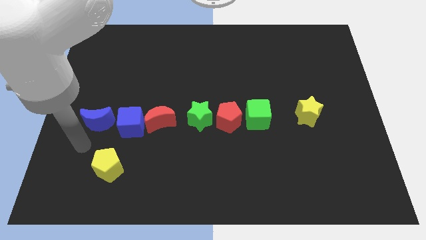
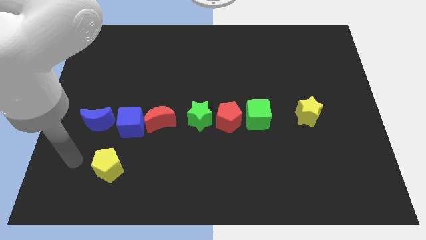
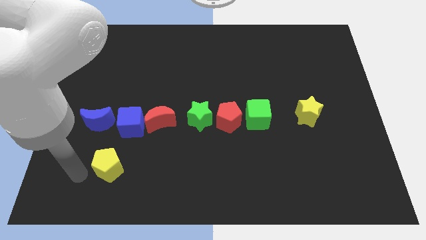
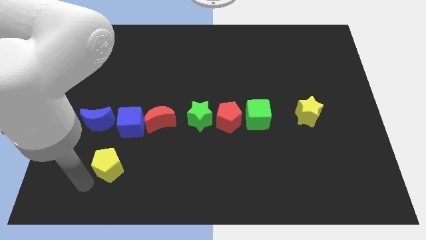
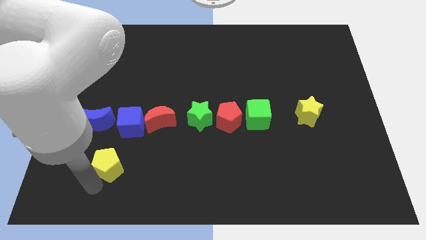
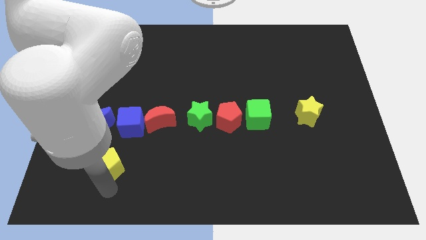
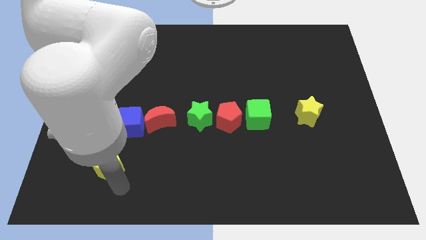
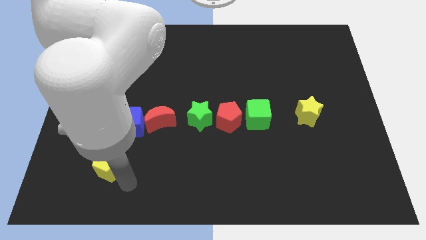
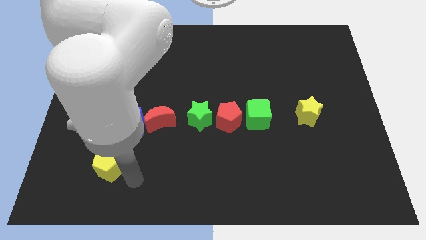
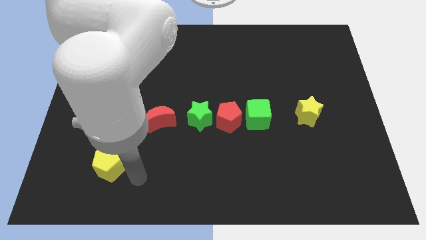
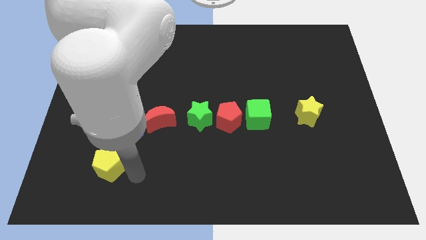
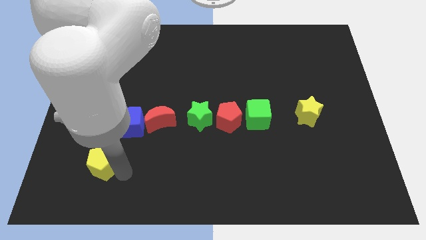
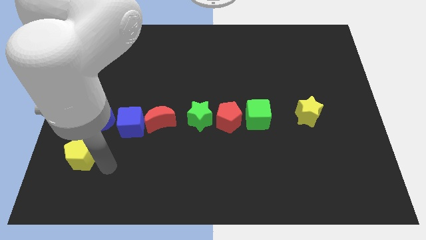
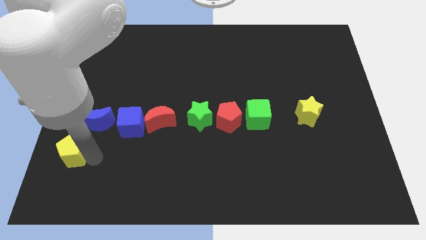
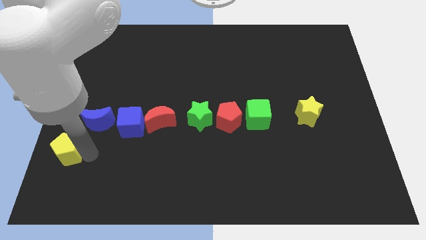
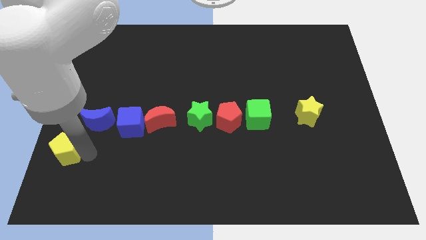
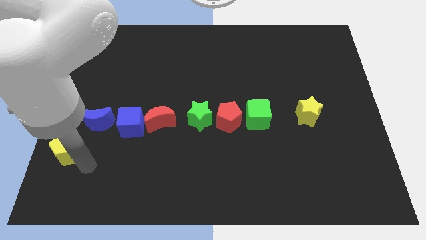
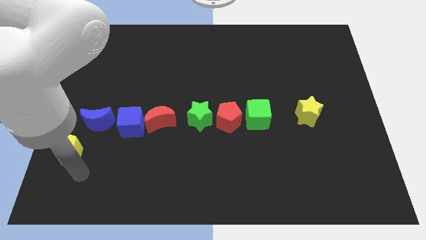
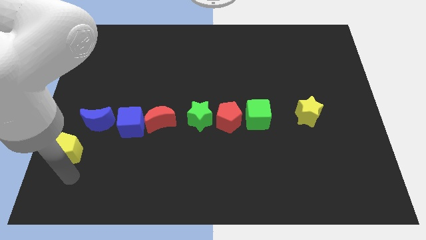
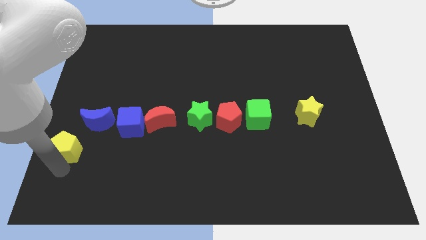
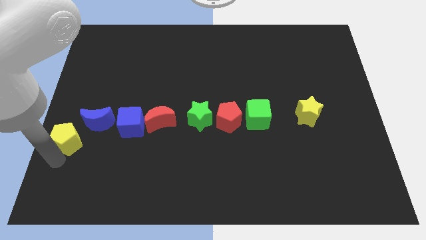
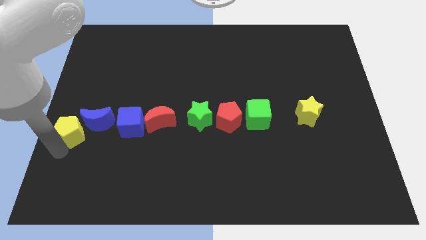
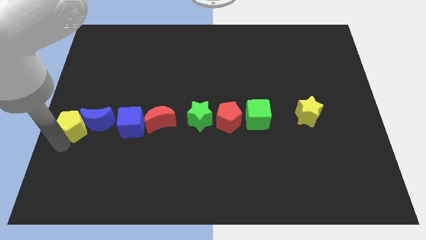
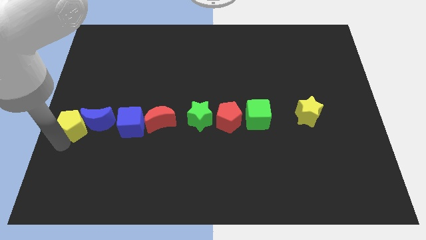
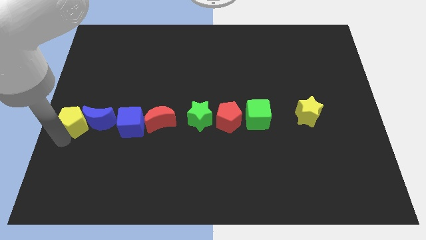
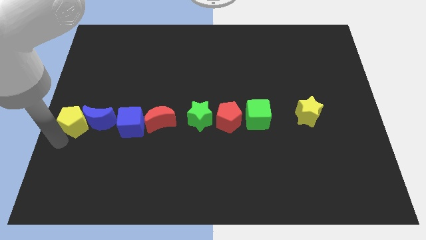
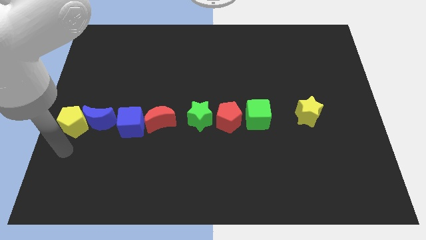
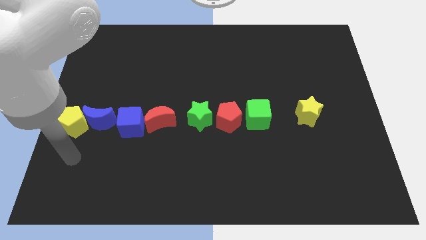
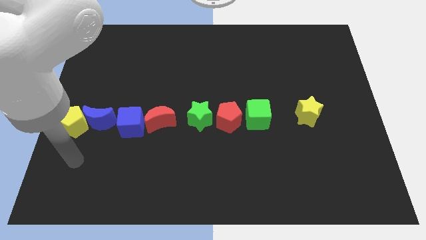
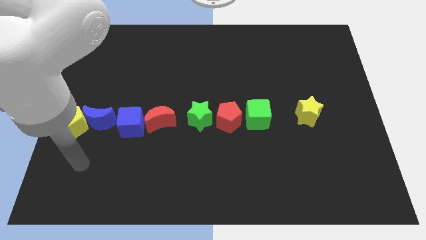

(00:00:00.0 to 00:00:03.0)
move the yellow pentagon to the left of the blue crescent

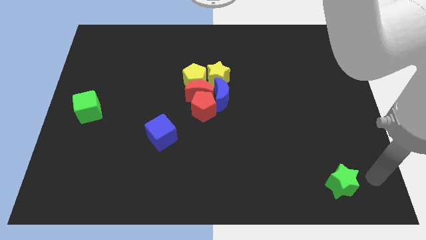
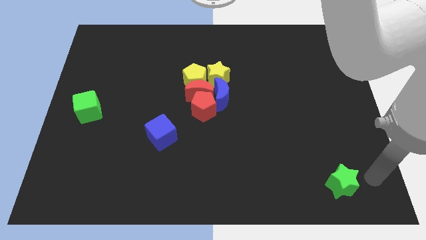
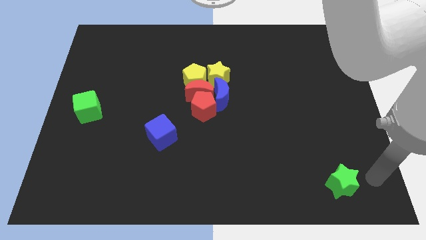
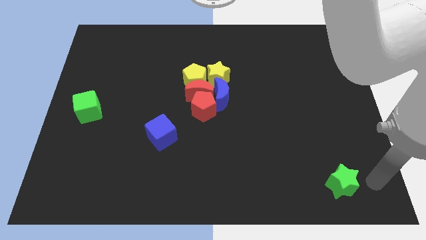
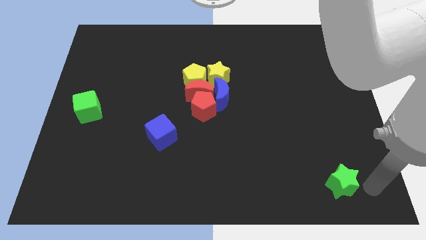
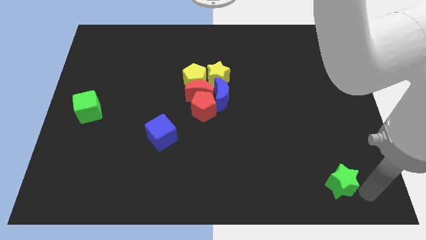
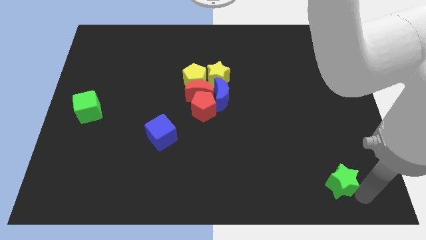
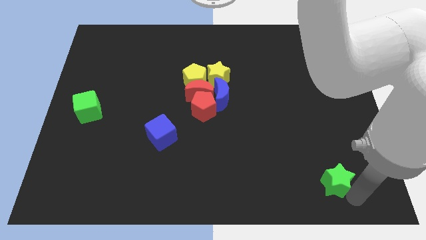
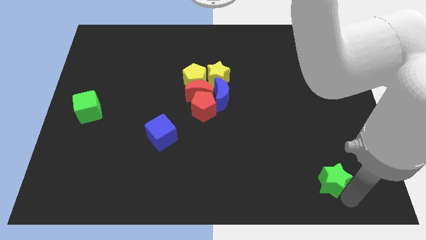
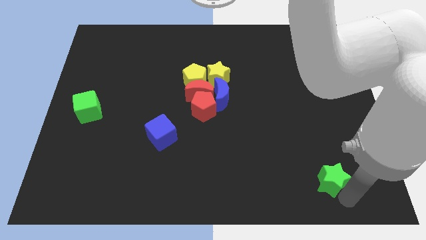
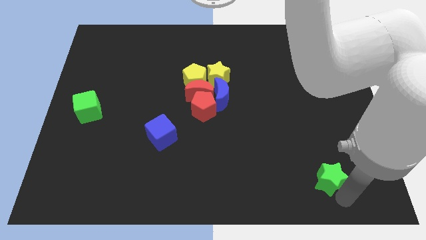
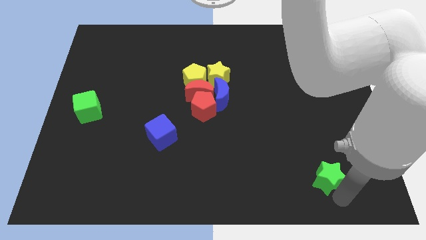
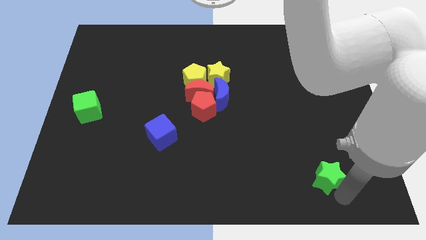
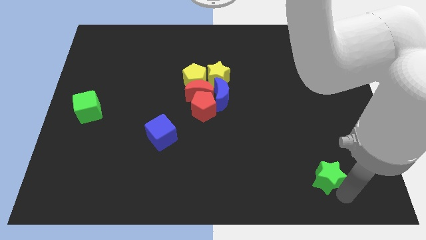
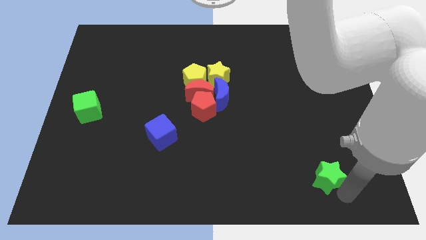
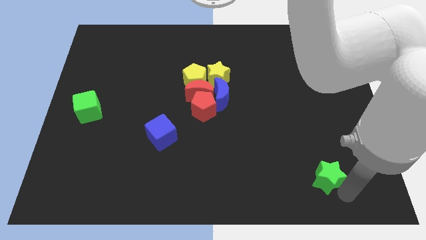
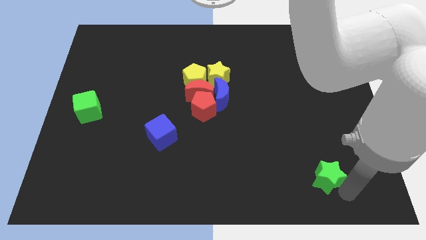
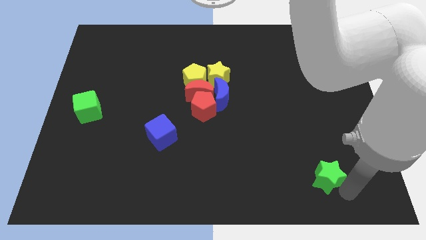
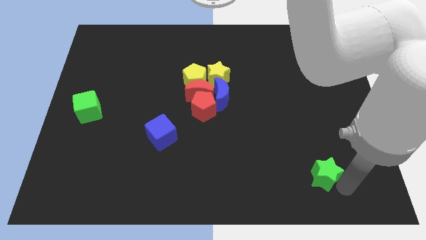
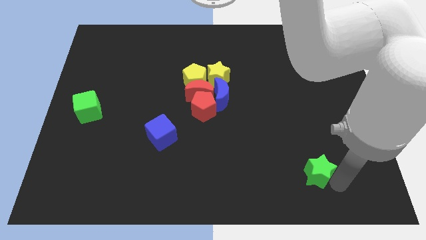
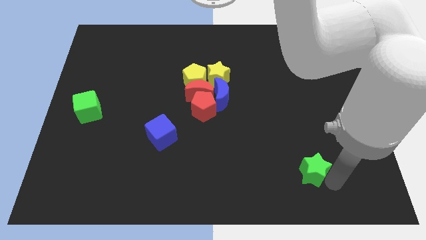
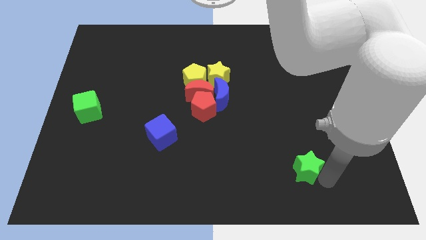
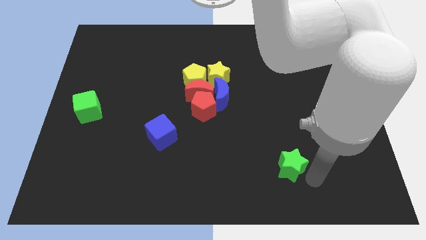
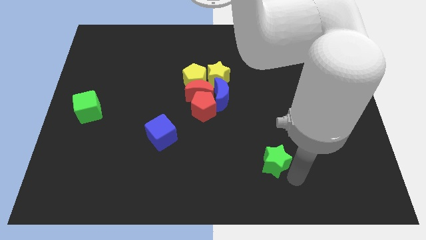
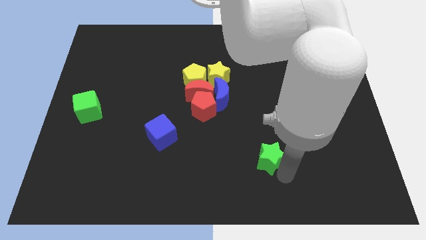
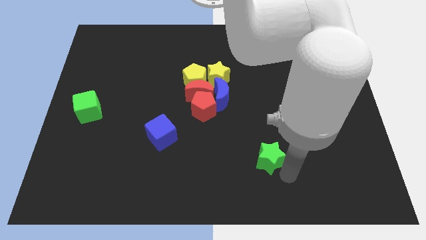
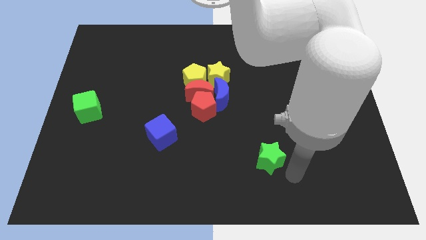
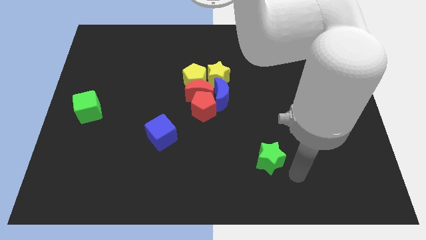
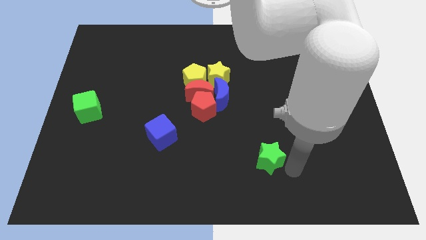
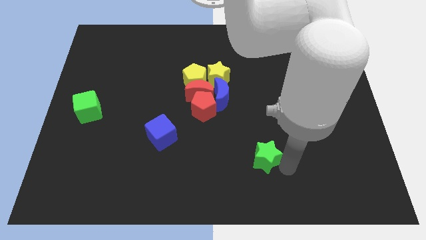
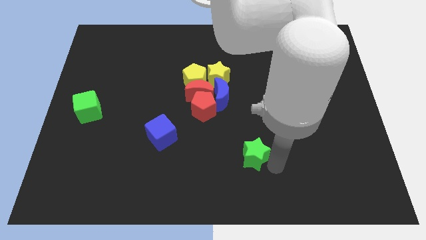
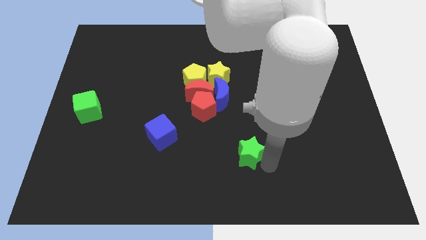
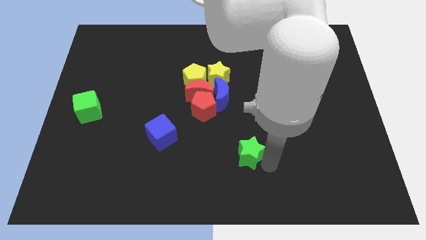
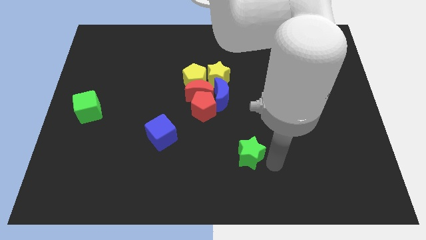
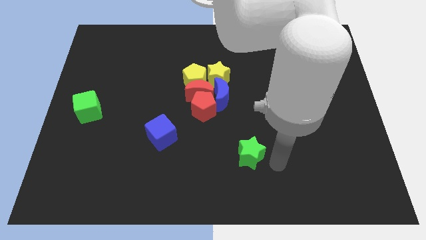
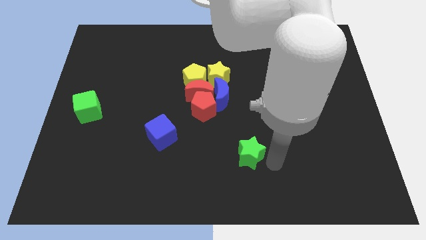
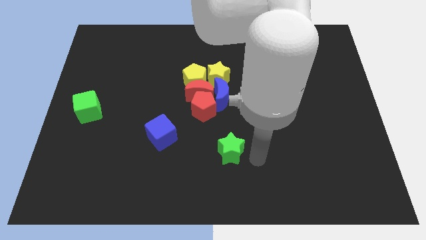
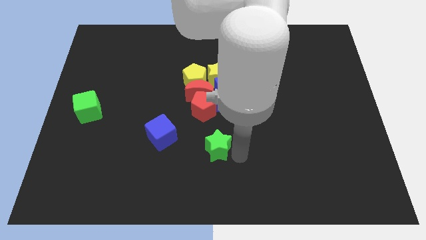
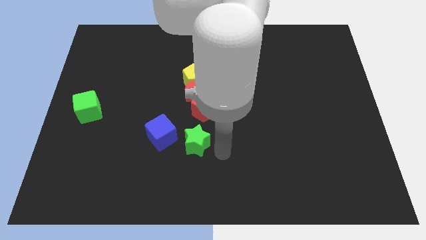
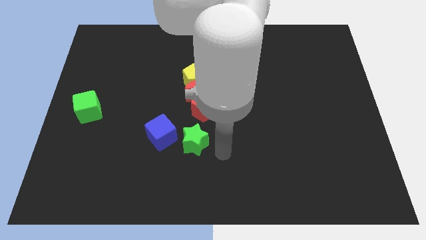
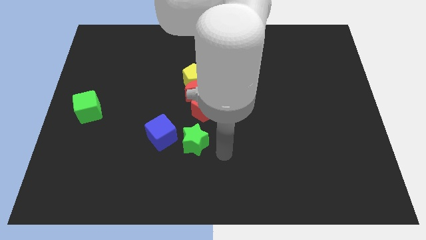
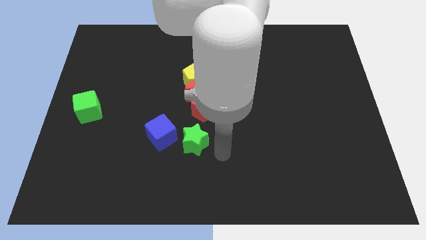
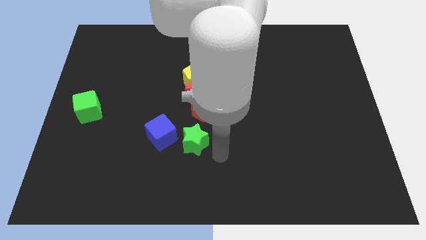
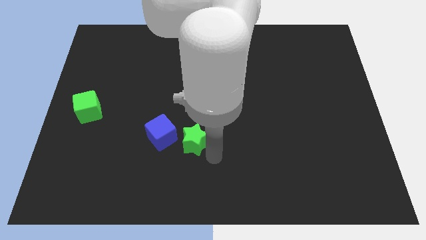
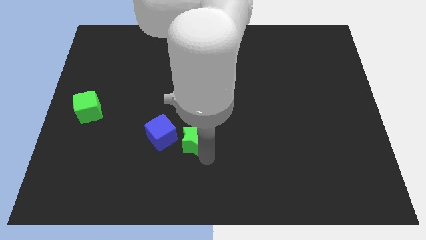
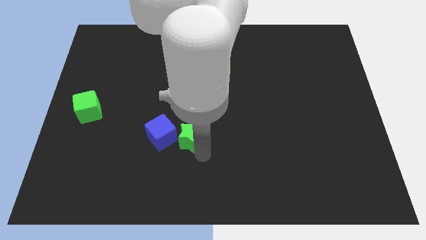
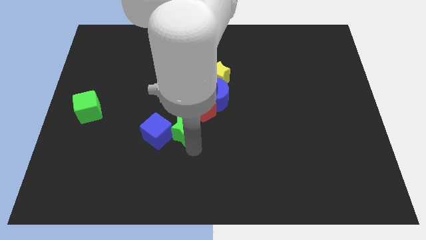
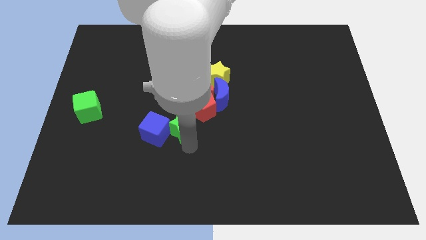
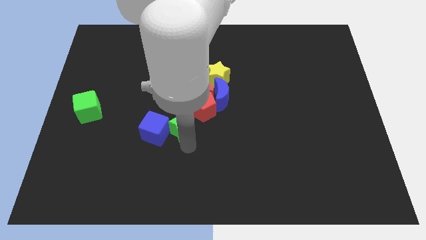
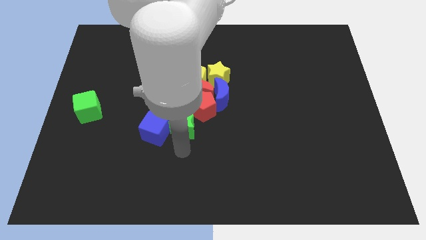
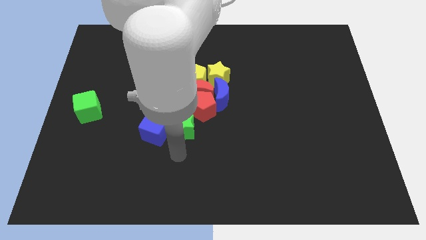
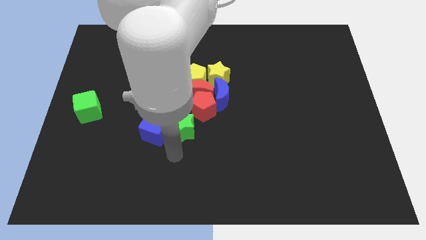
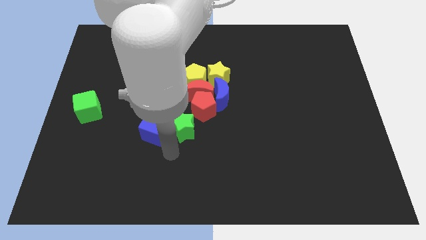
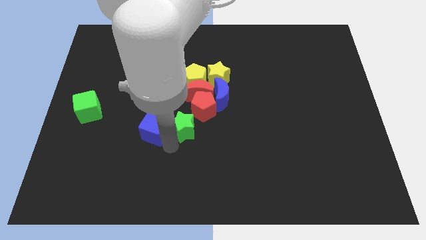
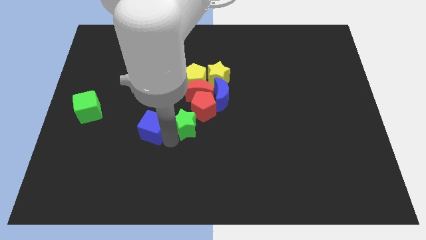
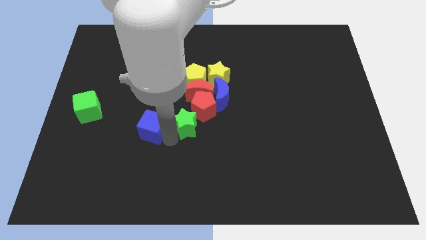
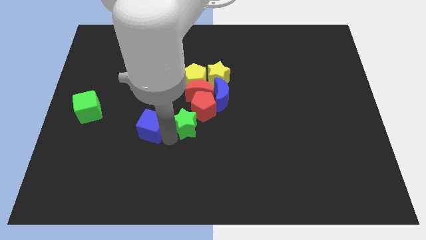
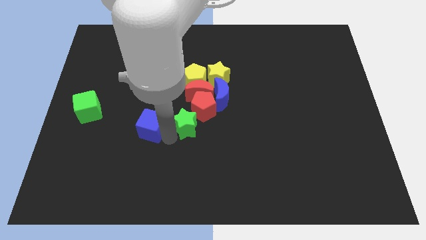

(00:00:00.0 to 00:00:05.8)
place the green star in between the red pentagon and the blue cube

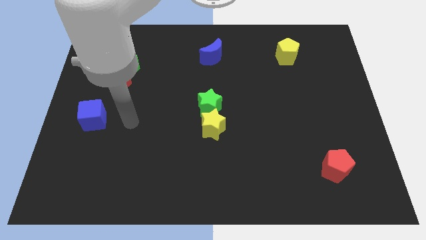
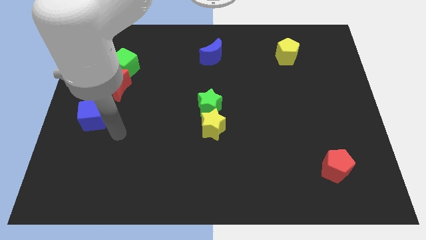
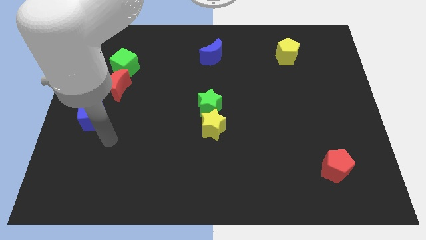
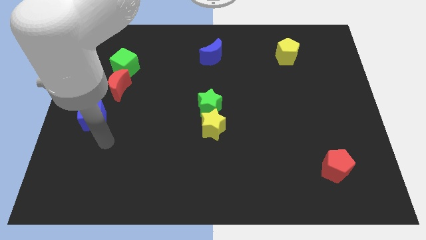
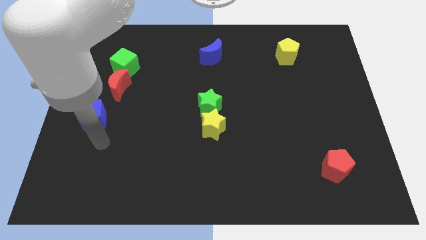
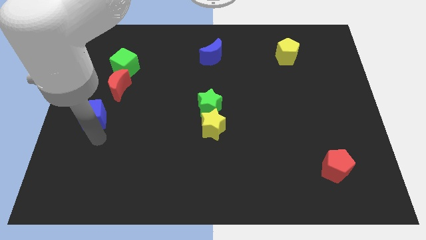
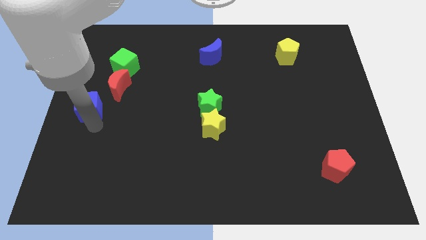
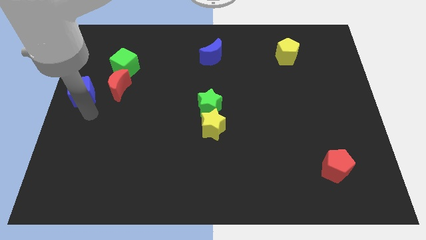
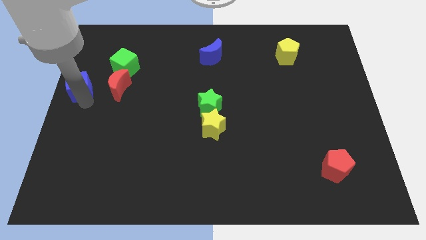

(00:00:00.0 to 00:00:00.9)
push blue cube beside red crescent
